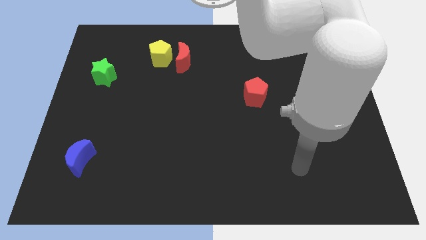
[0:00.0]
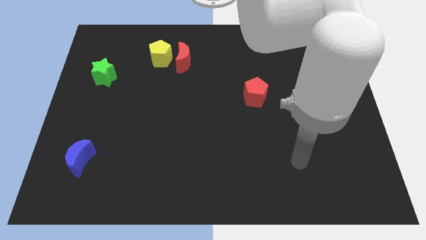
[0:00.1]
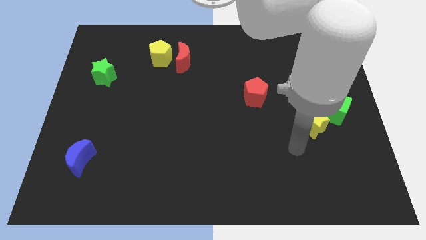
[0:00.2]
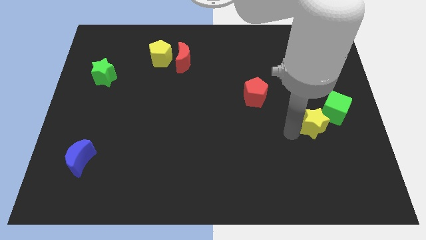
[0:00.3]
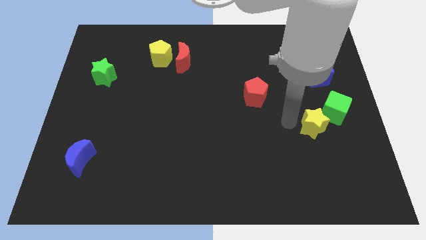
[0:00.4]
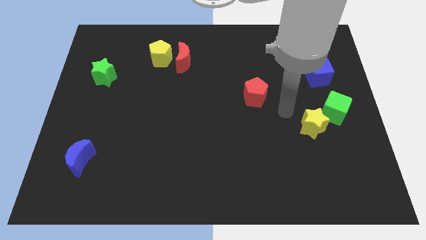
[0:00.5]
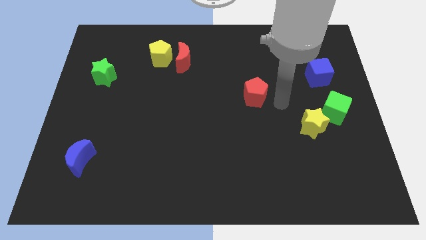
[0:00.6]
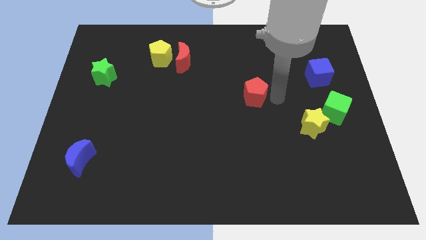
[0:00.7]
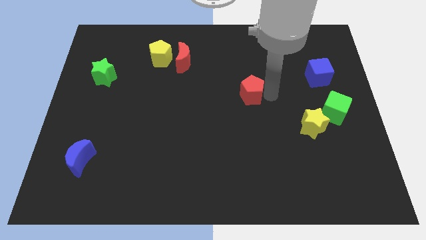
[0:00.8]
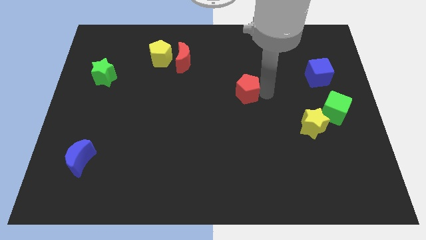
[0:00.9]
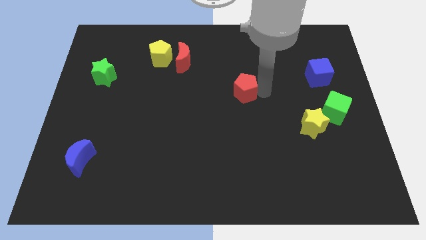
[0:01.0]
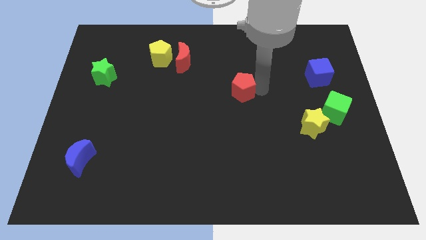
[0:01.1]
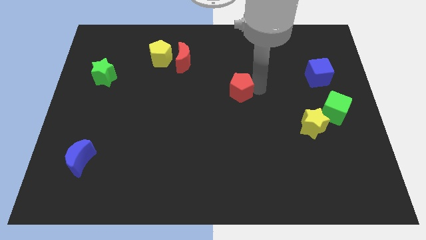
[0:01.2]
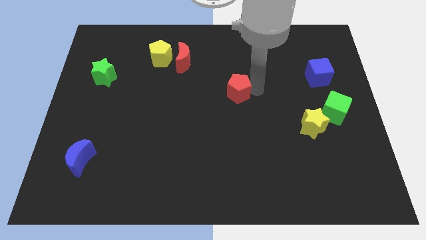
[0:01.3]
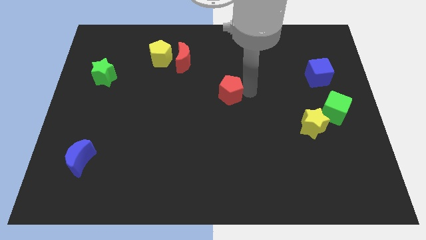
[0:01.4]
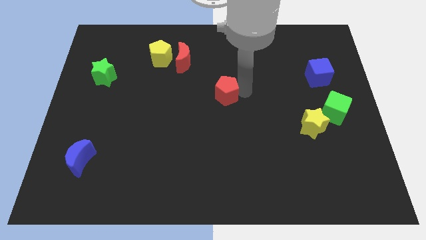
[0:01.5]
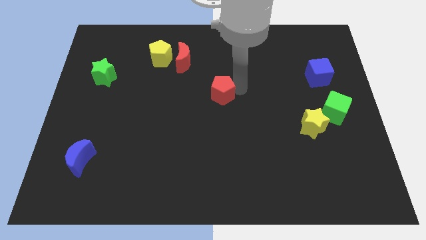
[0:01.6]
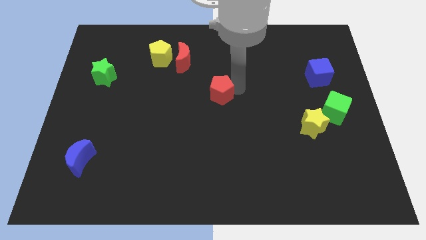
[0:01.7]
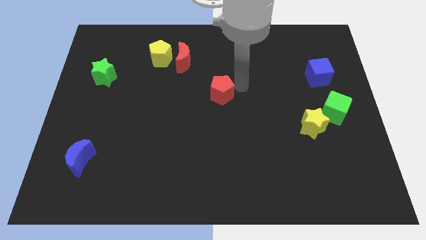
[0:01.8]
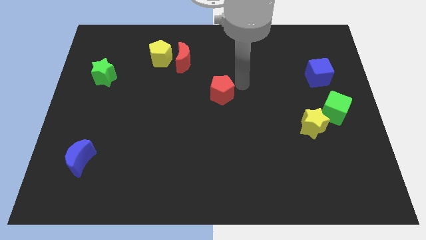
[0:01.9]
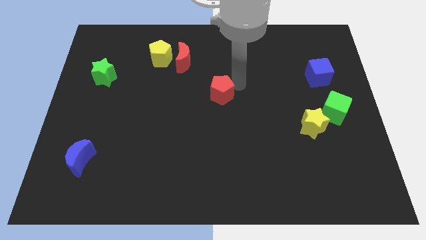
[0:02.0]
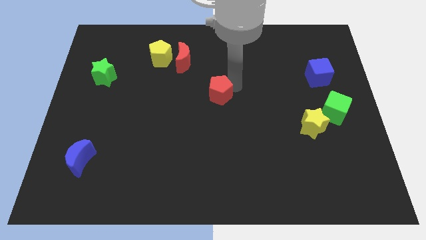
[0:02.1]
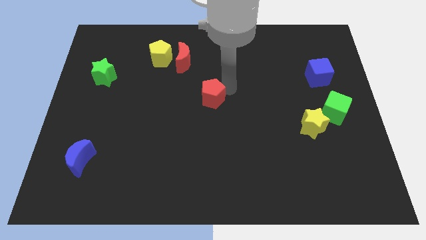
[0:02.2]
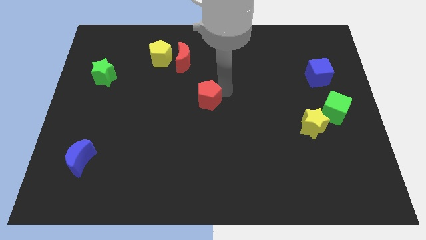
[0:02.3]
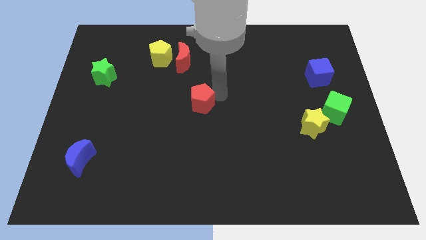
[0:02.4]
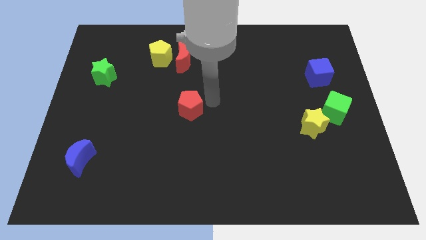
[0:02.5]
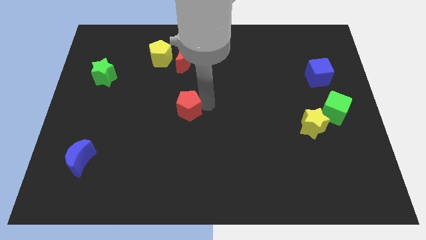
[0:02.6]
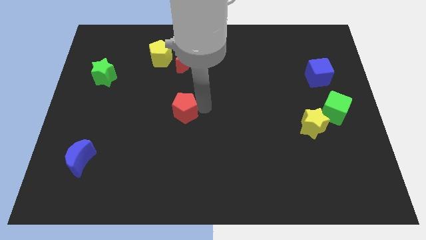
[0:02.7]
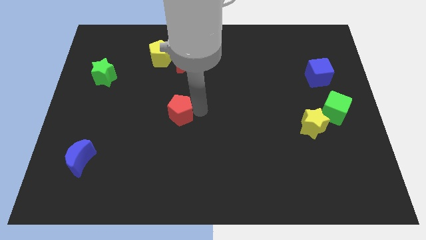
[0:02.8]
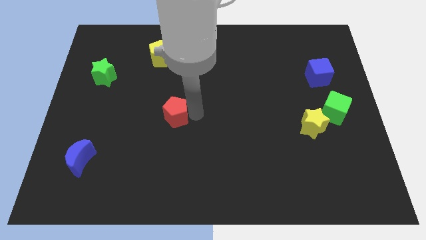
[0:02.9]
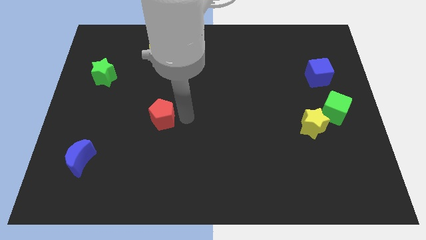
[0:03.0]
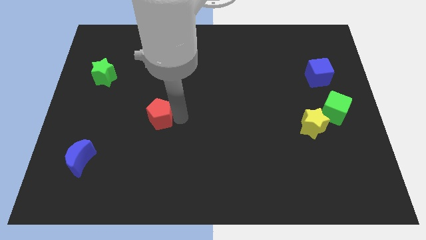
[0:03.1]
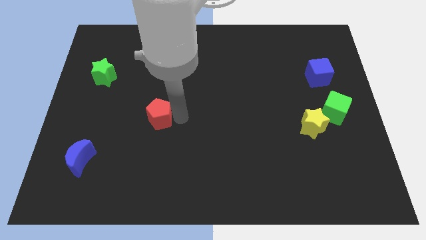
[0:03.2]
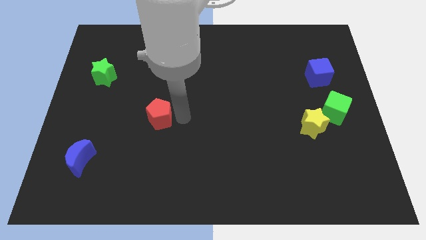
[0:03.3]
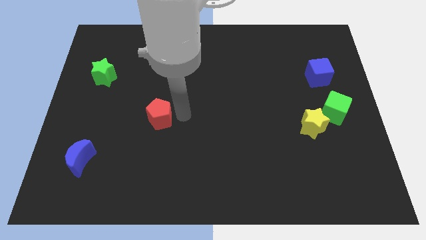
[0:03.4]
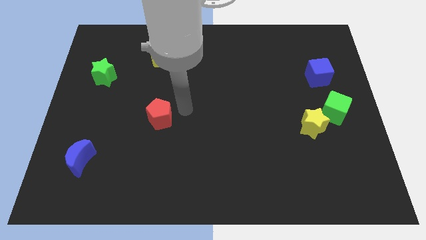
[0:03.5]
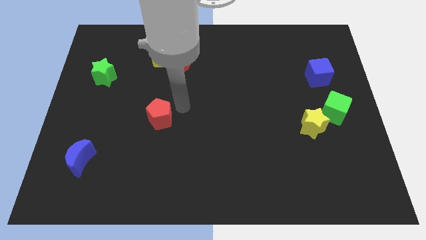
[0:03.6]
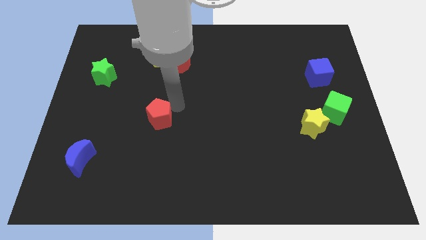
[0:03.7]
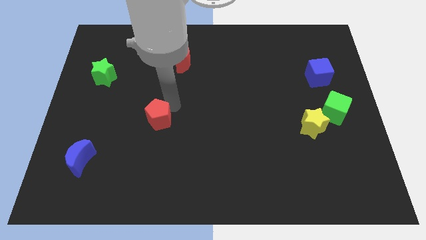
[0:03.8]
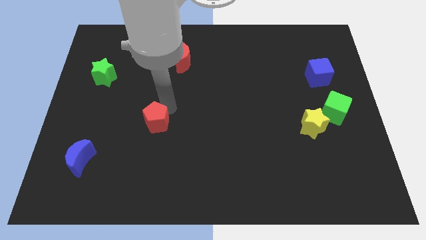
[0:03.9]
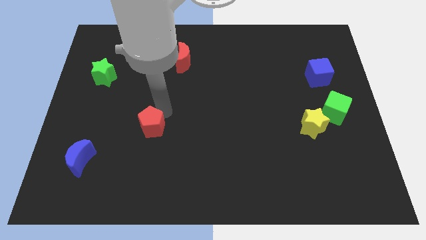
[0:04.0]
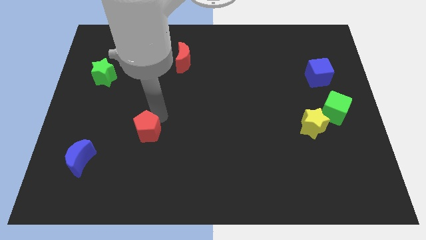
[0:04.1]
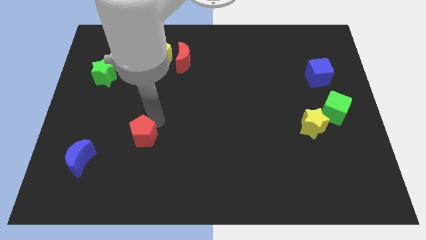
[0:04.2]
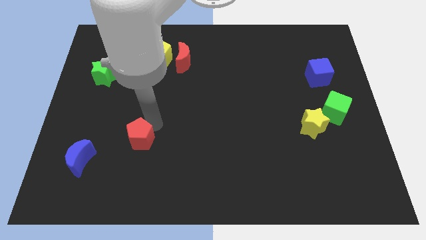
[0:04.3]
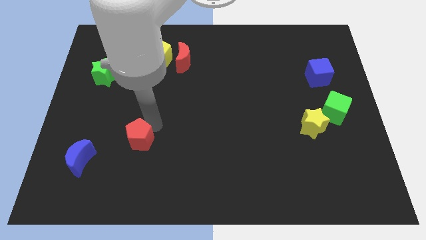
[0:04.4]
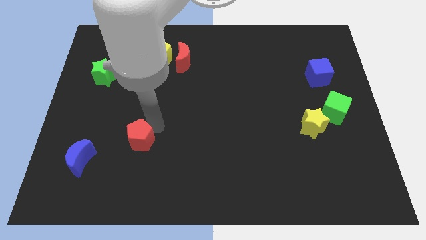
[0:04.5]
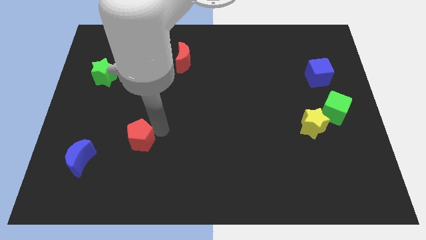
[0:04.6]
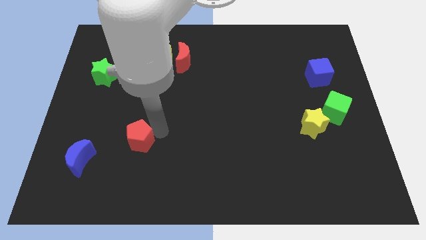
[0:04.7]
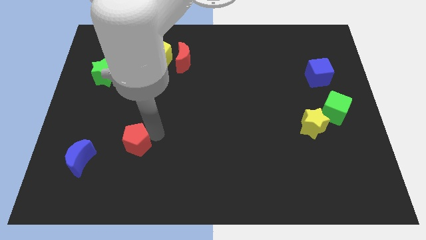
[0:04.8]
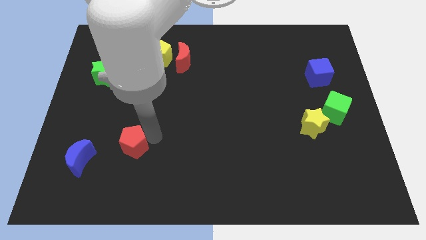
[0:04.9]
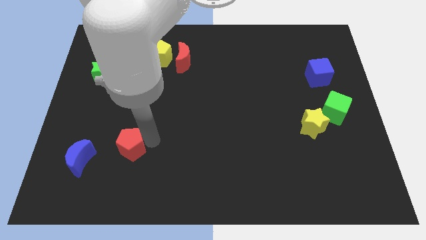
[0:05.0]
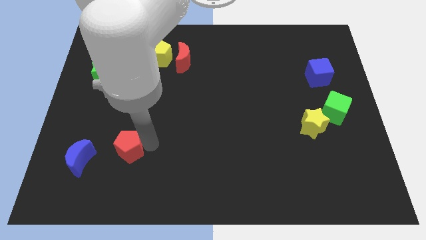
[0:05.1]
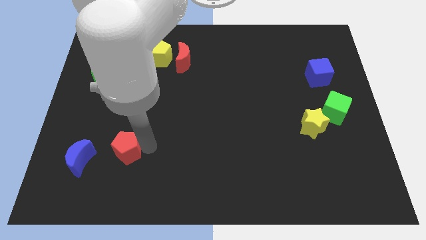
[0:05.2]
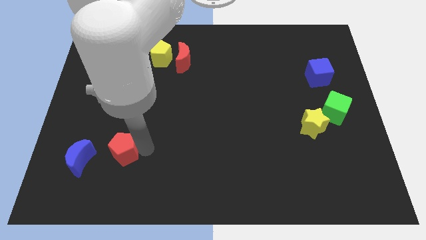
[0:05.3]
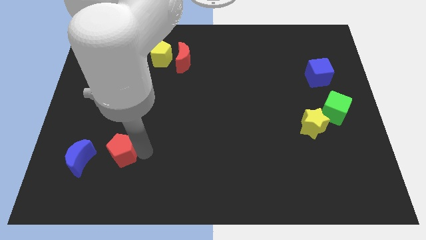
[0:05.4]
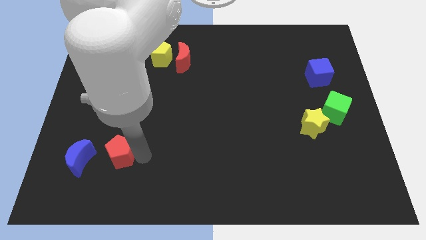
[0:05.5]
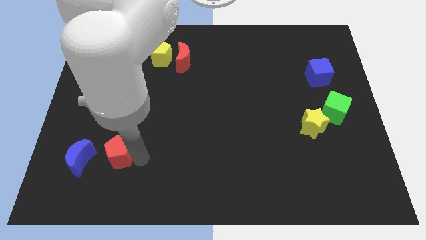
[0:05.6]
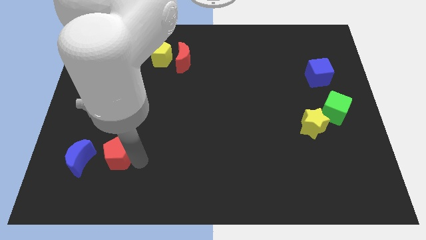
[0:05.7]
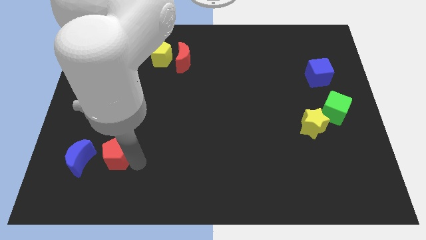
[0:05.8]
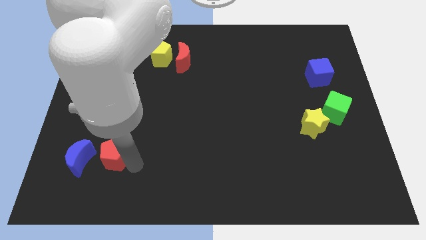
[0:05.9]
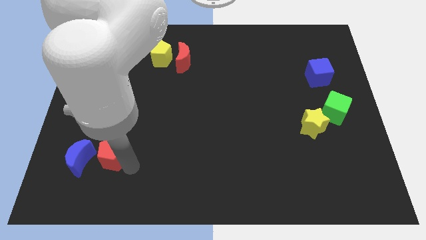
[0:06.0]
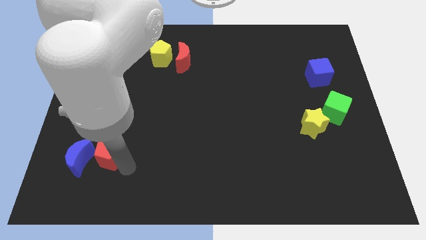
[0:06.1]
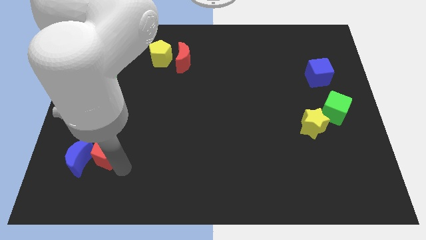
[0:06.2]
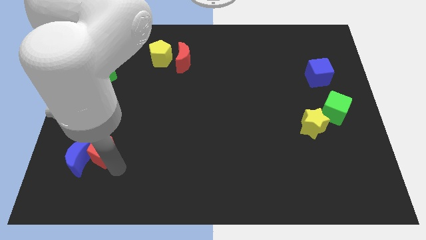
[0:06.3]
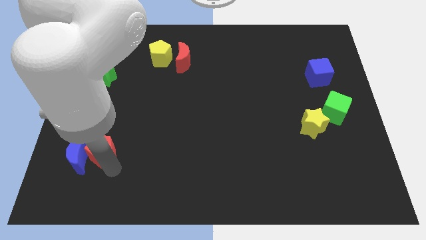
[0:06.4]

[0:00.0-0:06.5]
push the red pentagon to the blue moon

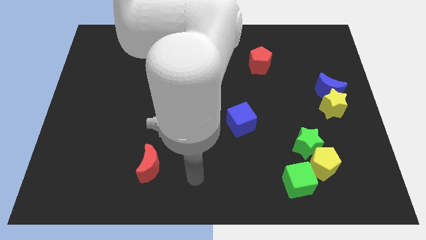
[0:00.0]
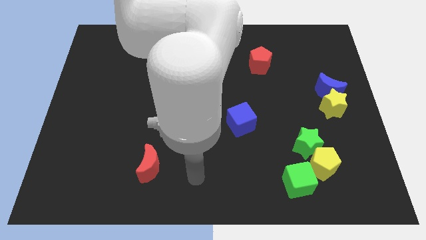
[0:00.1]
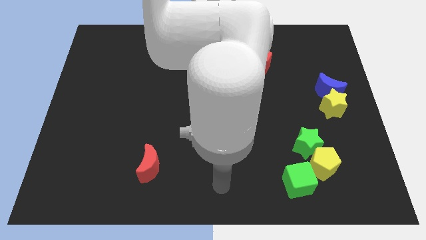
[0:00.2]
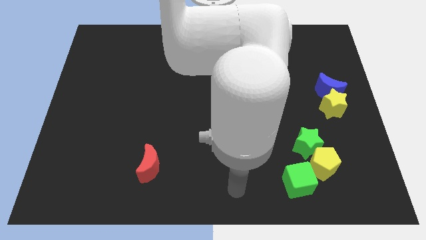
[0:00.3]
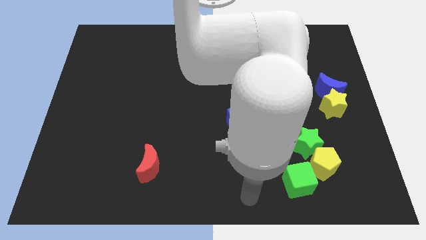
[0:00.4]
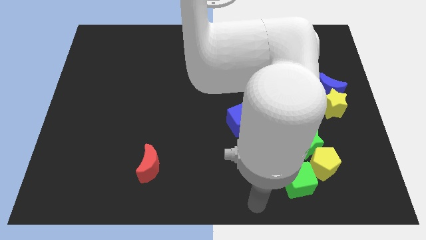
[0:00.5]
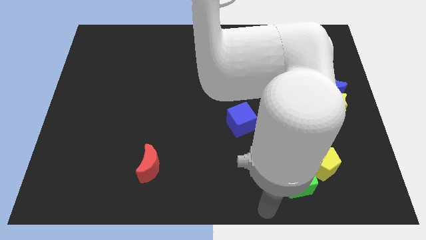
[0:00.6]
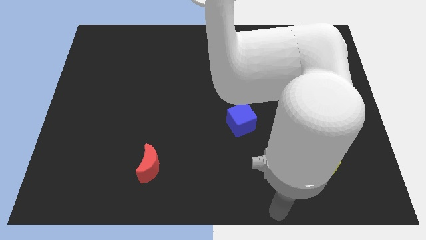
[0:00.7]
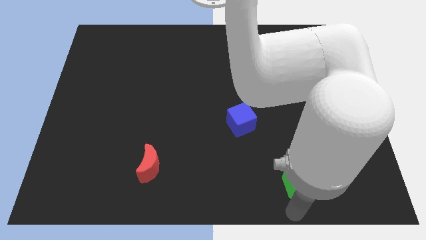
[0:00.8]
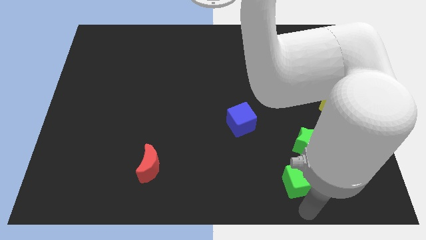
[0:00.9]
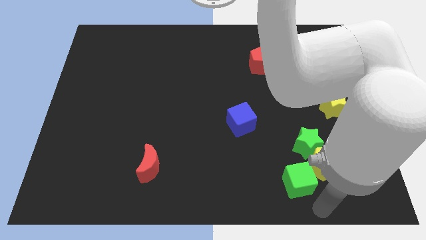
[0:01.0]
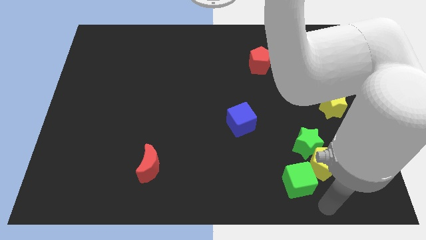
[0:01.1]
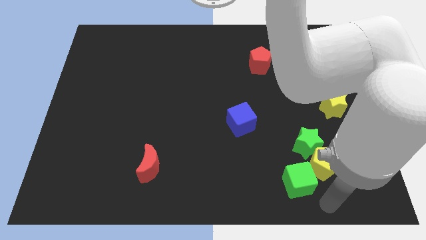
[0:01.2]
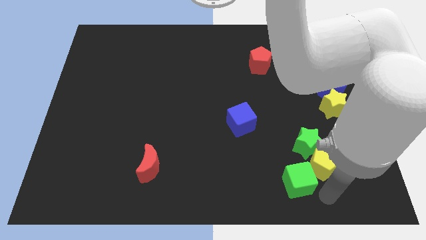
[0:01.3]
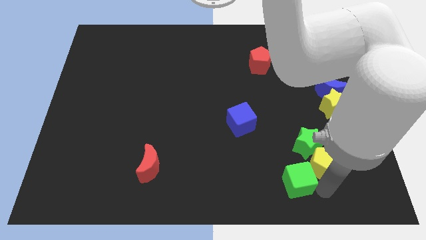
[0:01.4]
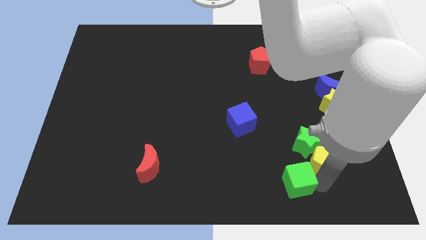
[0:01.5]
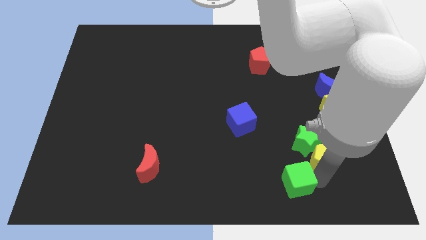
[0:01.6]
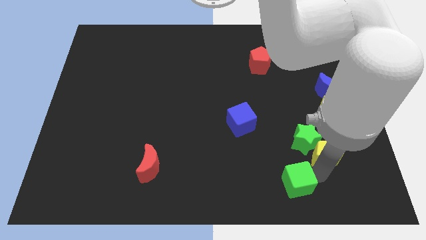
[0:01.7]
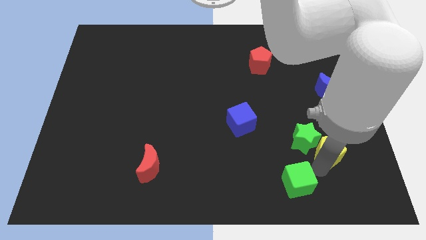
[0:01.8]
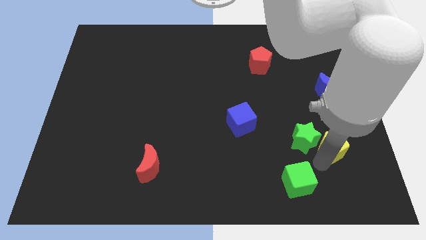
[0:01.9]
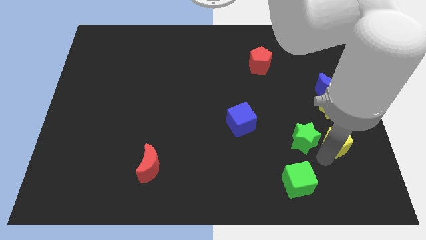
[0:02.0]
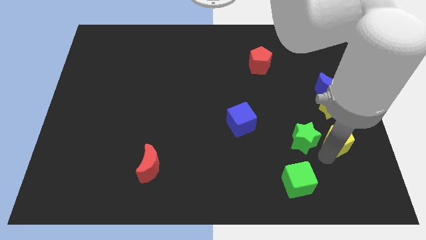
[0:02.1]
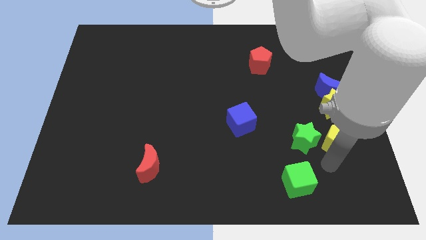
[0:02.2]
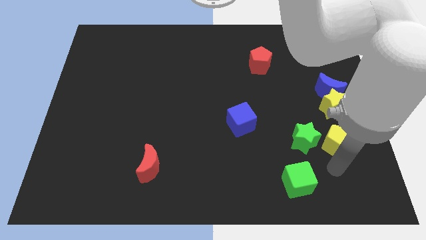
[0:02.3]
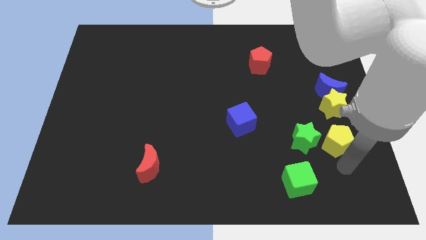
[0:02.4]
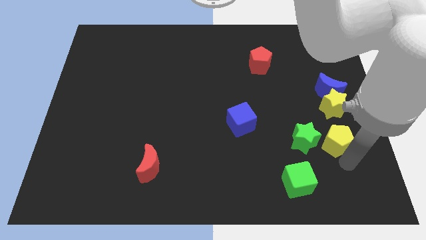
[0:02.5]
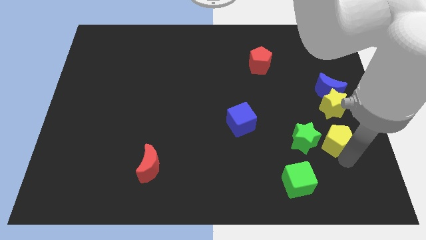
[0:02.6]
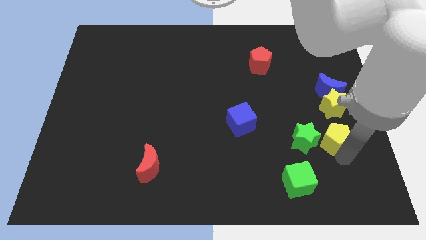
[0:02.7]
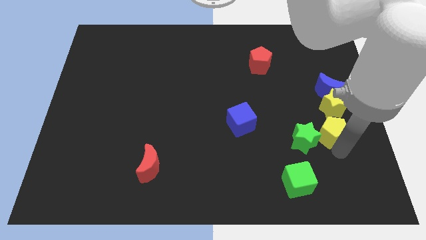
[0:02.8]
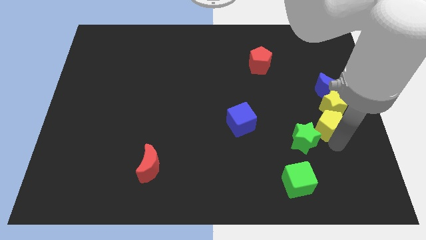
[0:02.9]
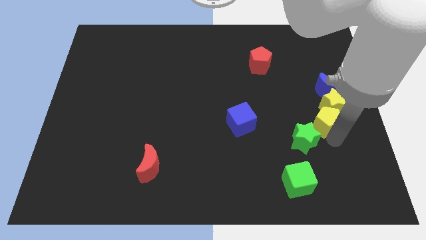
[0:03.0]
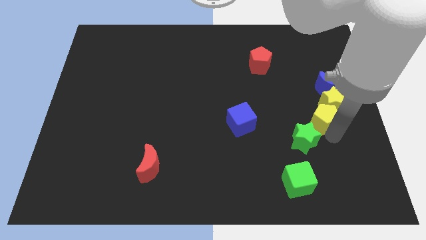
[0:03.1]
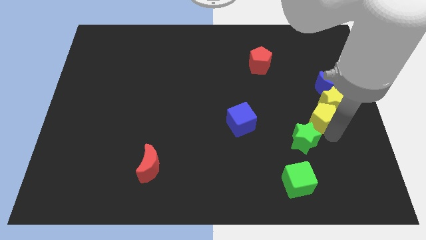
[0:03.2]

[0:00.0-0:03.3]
put the yellow pentagon close to the yellow star
